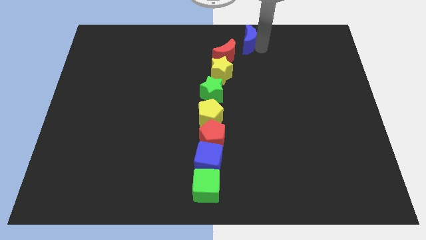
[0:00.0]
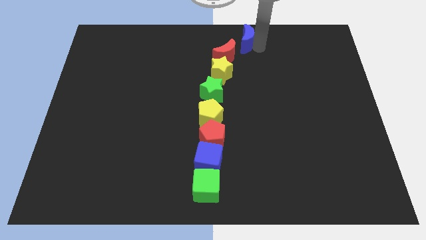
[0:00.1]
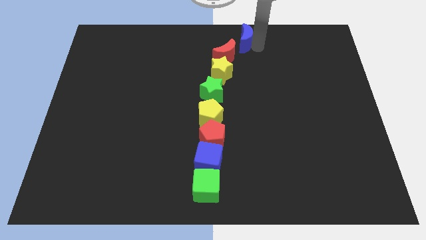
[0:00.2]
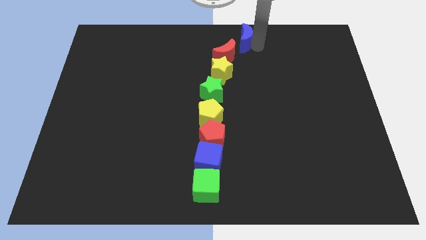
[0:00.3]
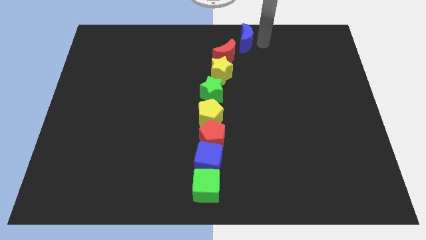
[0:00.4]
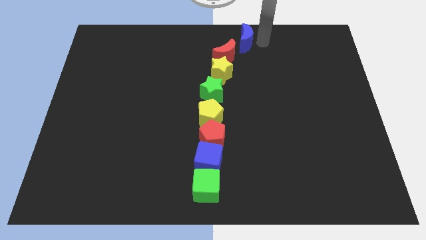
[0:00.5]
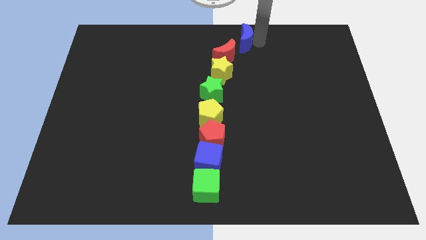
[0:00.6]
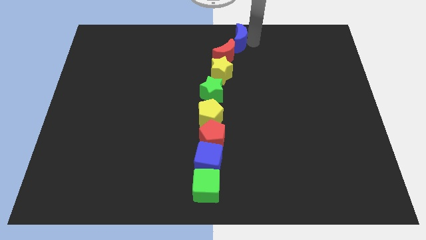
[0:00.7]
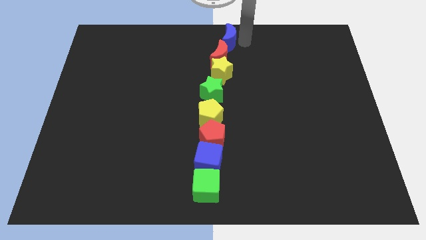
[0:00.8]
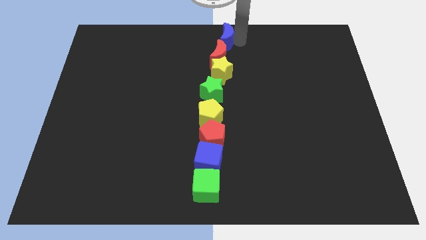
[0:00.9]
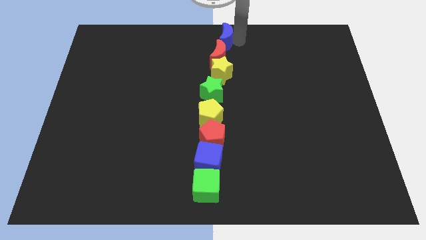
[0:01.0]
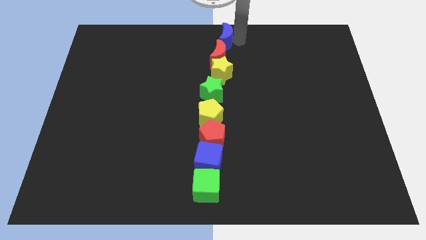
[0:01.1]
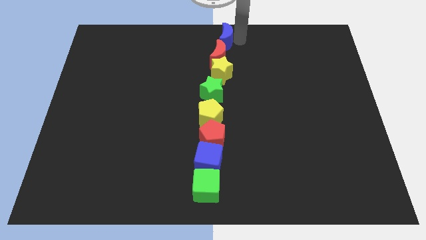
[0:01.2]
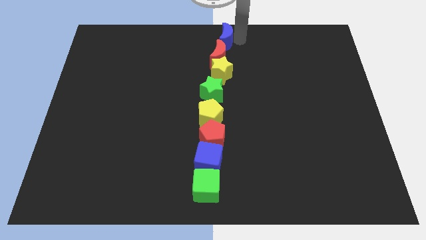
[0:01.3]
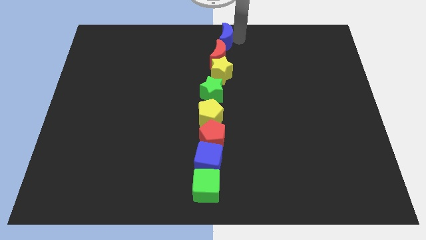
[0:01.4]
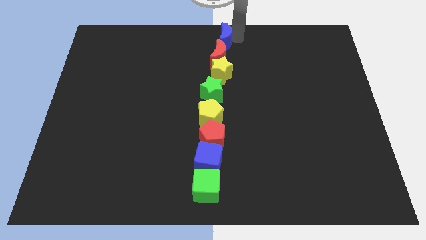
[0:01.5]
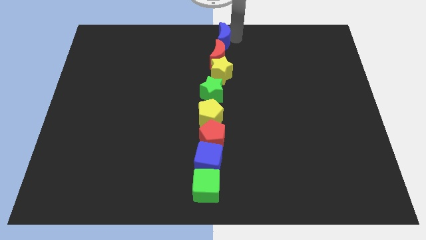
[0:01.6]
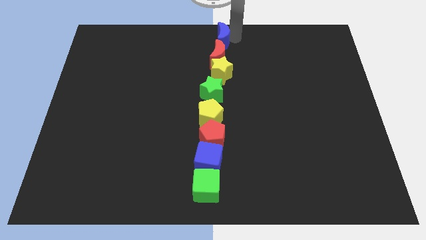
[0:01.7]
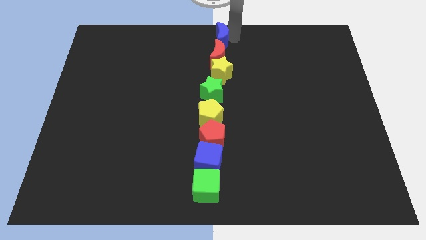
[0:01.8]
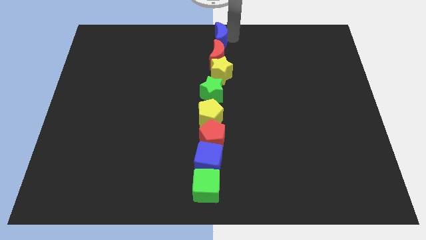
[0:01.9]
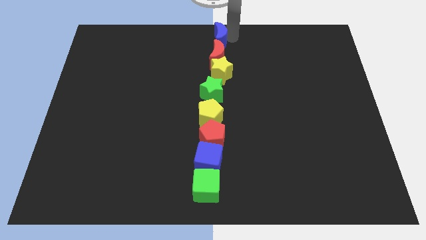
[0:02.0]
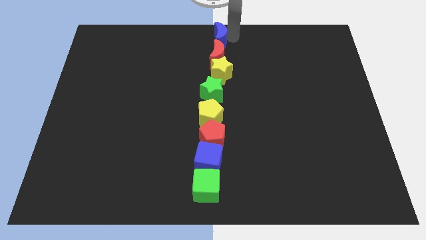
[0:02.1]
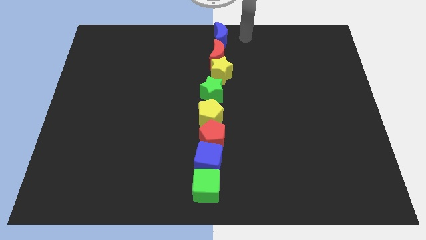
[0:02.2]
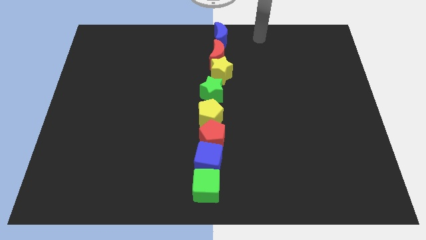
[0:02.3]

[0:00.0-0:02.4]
place blue moon above red moon

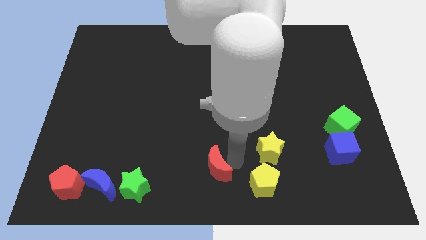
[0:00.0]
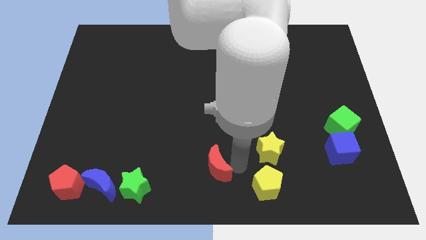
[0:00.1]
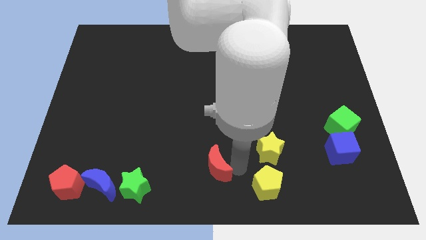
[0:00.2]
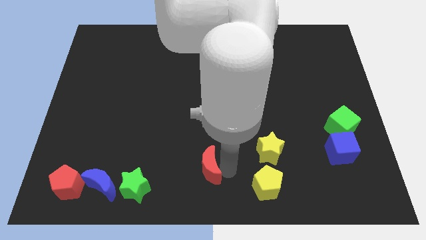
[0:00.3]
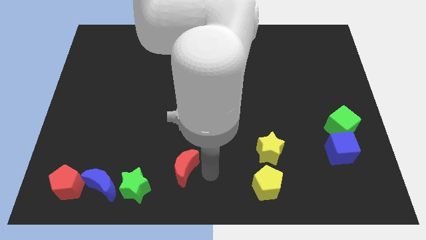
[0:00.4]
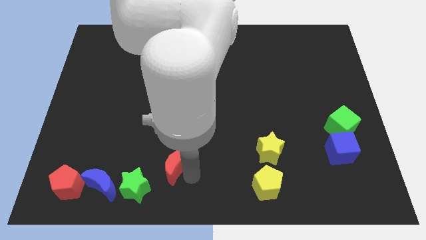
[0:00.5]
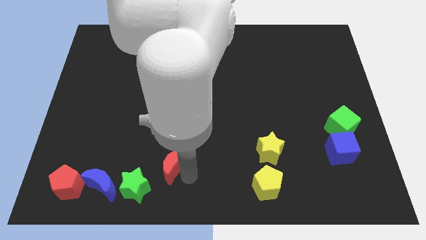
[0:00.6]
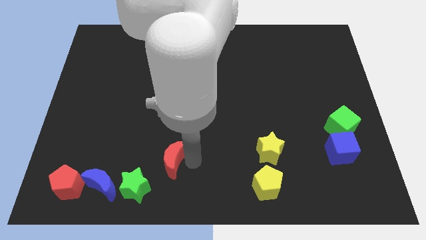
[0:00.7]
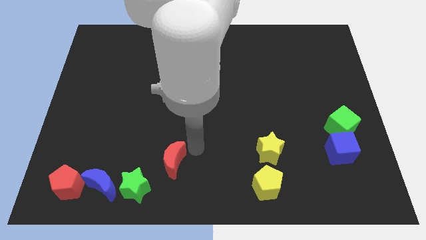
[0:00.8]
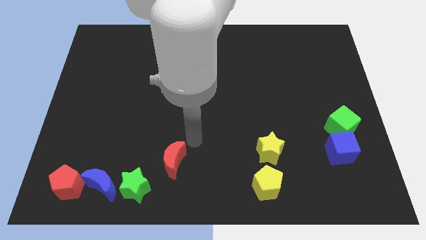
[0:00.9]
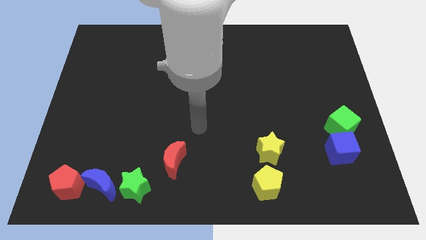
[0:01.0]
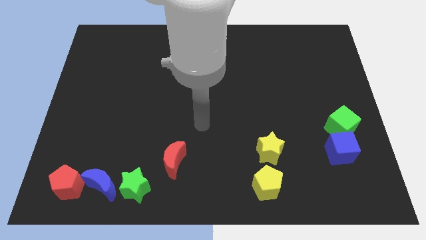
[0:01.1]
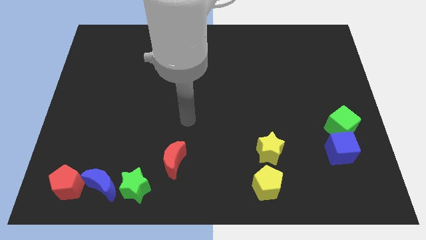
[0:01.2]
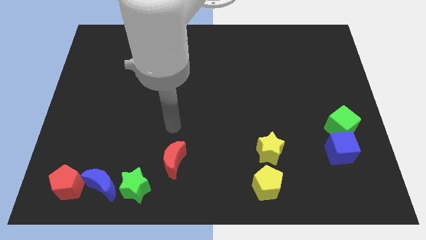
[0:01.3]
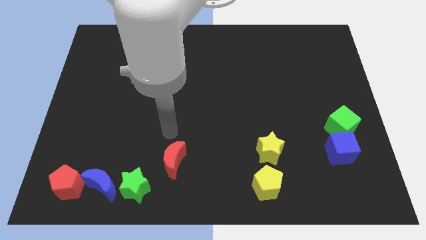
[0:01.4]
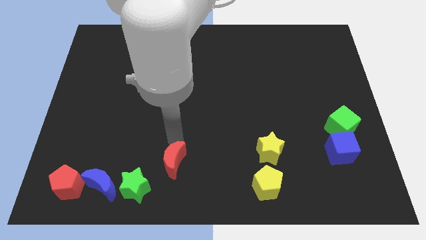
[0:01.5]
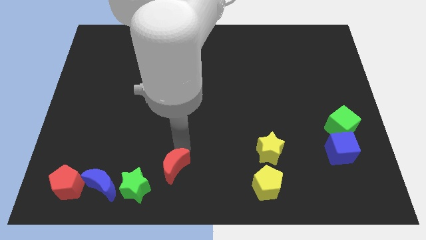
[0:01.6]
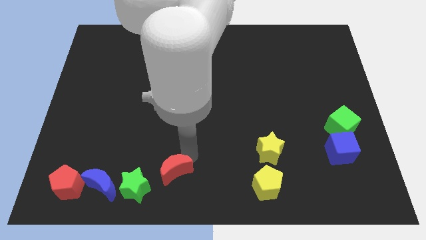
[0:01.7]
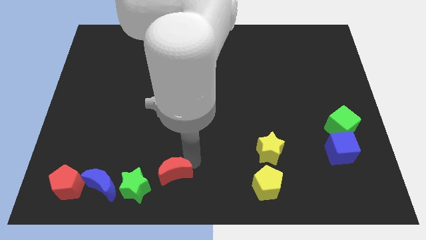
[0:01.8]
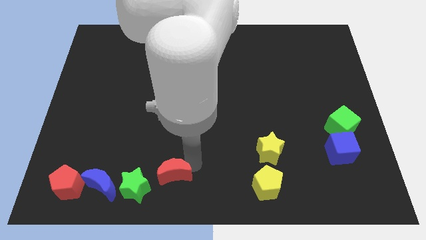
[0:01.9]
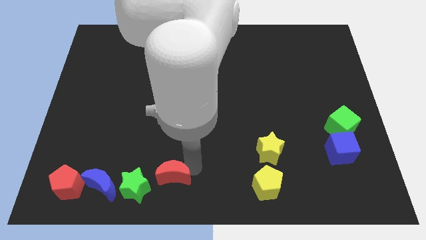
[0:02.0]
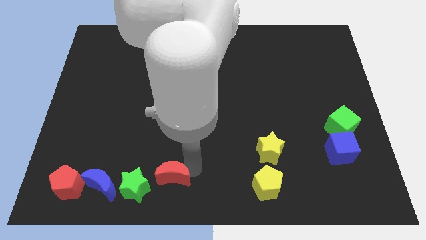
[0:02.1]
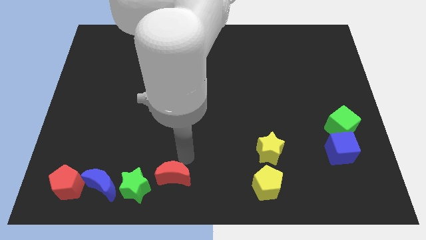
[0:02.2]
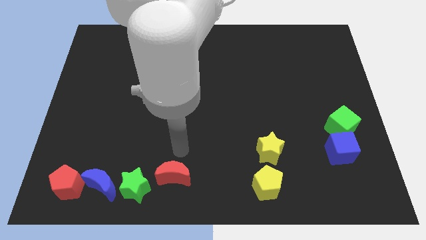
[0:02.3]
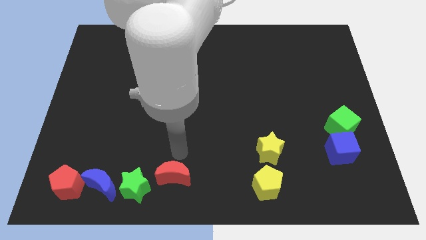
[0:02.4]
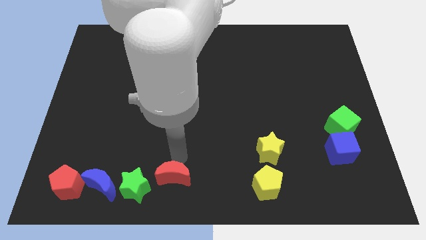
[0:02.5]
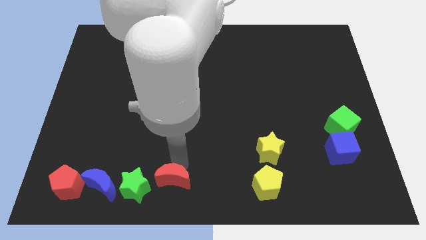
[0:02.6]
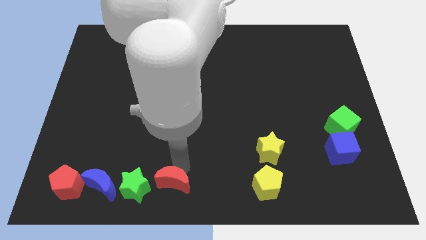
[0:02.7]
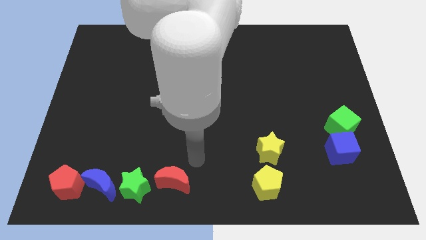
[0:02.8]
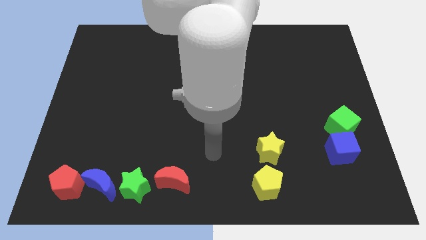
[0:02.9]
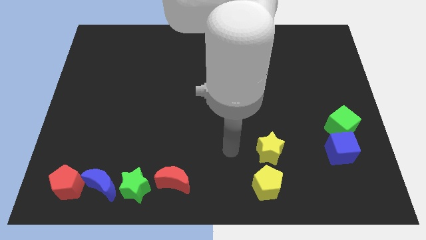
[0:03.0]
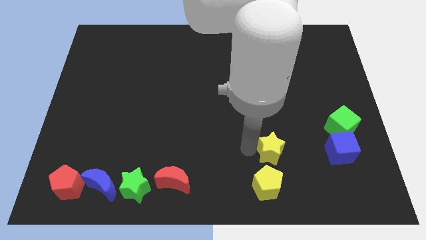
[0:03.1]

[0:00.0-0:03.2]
push the red crescent to the right of the green star

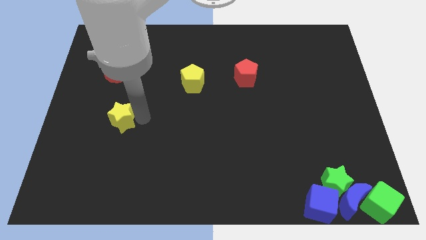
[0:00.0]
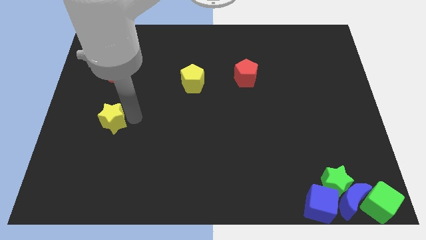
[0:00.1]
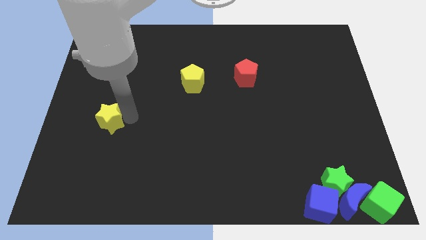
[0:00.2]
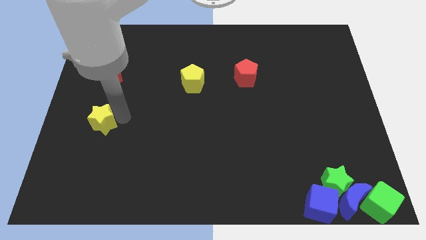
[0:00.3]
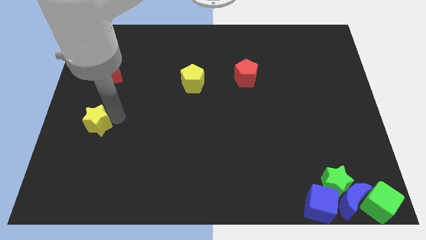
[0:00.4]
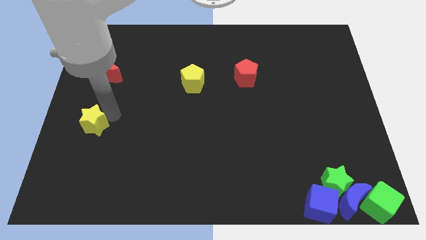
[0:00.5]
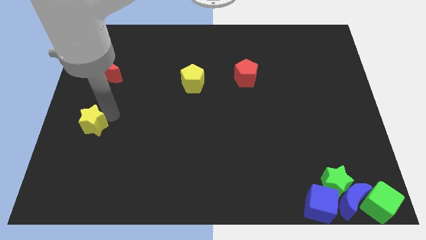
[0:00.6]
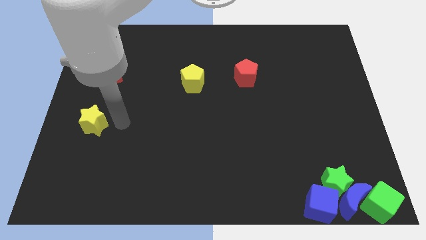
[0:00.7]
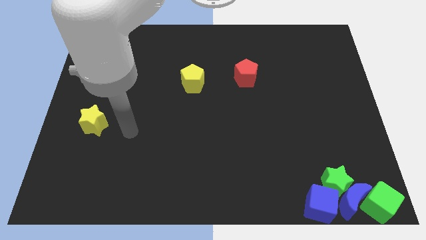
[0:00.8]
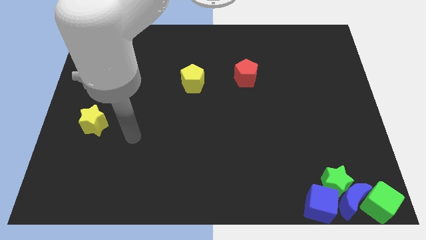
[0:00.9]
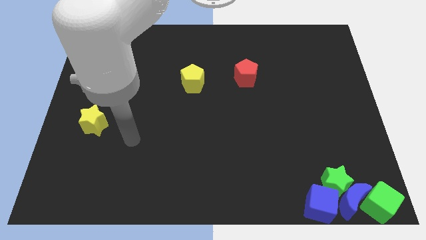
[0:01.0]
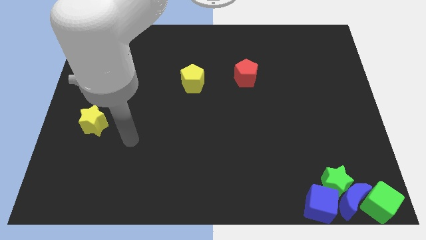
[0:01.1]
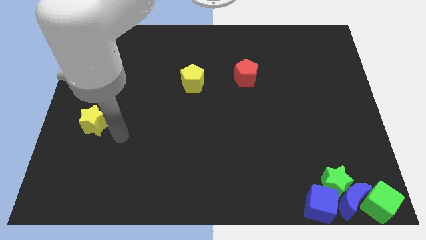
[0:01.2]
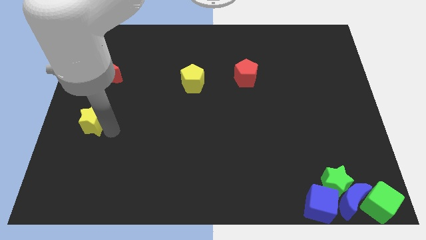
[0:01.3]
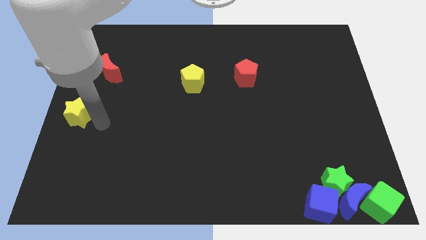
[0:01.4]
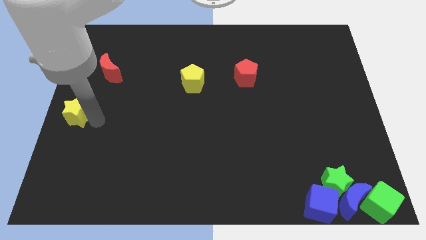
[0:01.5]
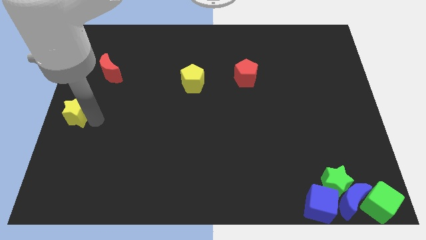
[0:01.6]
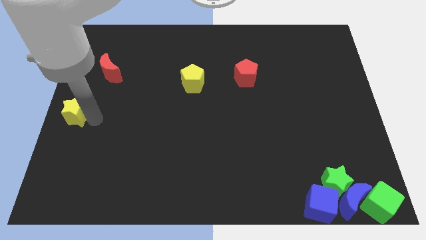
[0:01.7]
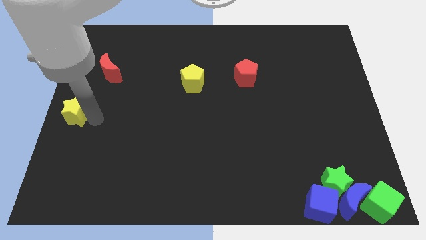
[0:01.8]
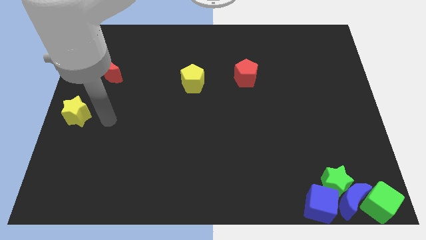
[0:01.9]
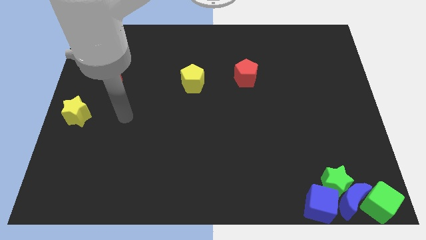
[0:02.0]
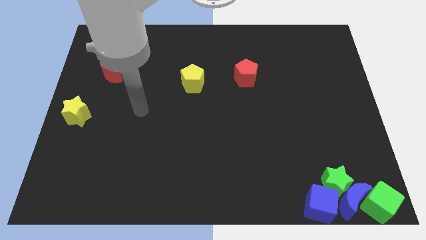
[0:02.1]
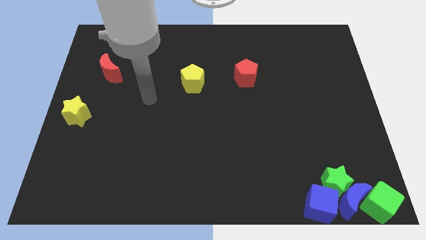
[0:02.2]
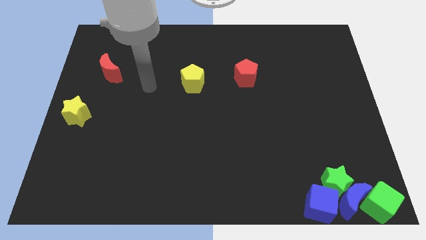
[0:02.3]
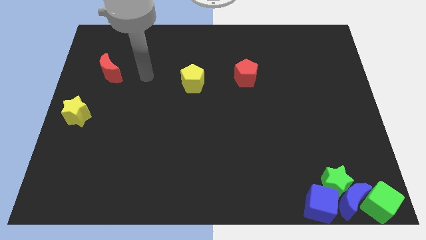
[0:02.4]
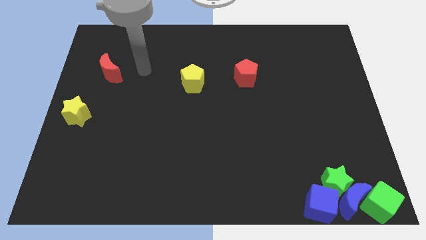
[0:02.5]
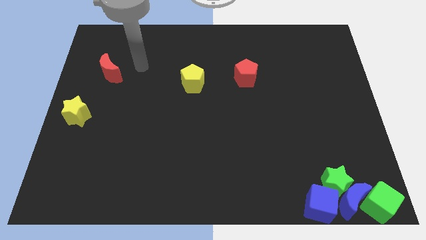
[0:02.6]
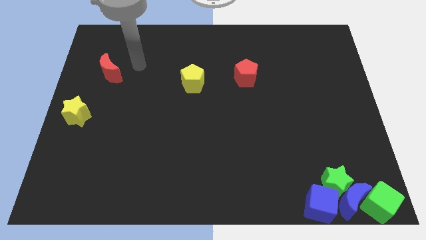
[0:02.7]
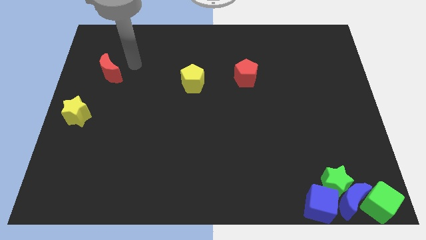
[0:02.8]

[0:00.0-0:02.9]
place the yellow star at the center left side of the board

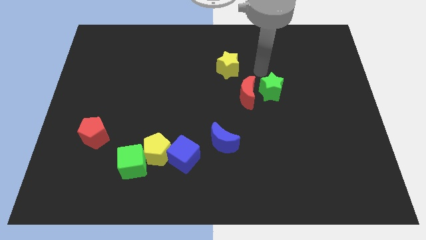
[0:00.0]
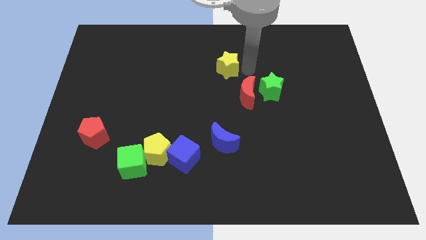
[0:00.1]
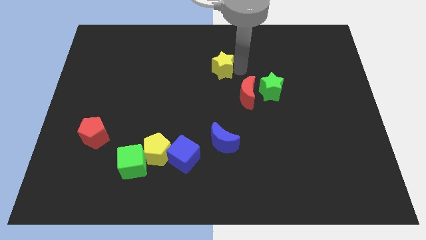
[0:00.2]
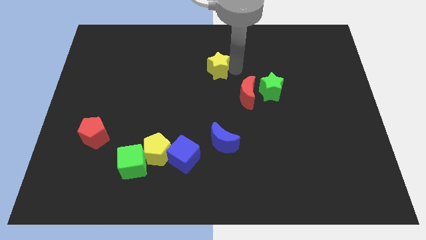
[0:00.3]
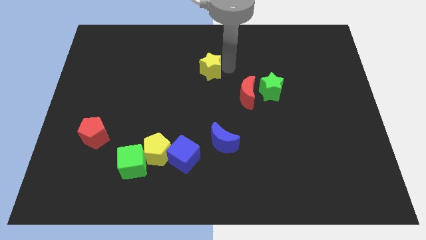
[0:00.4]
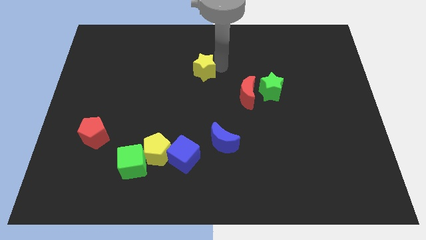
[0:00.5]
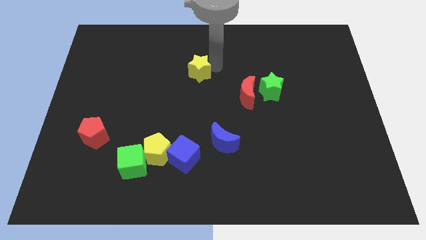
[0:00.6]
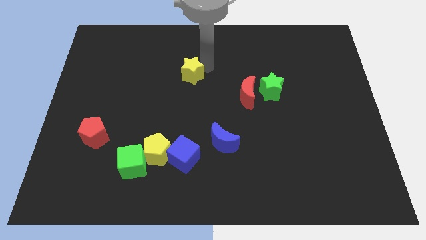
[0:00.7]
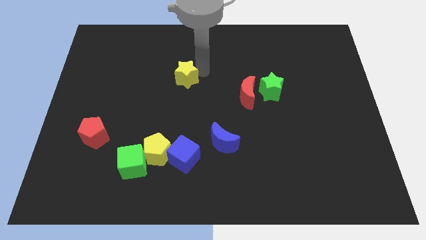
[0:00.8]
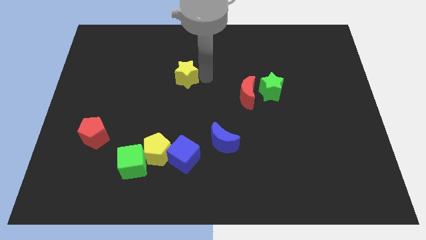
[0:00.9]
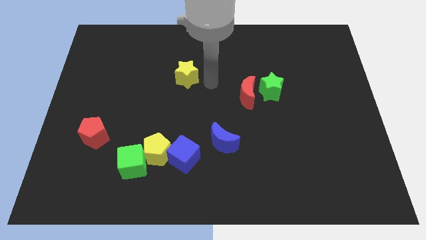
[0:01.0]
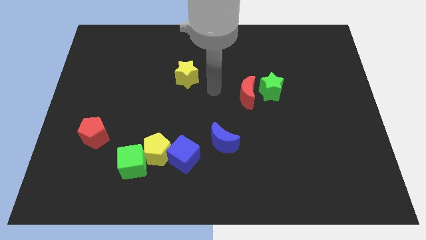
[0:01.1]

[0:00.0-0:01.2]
push the yellow star to the left of the board
